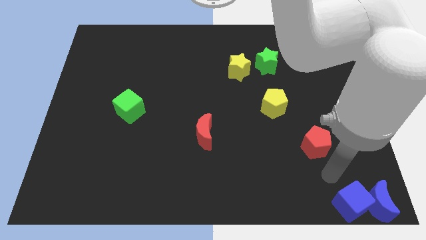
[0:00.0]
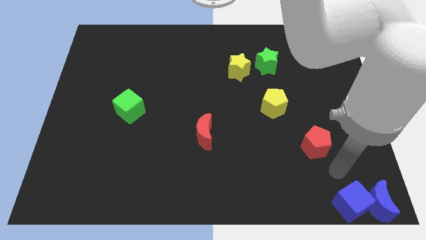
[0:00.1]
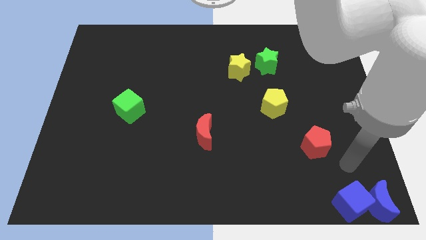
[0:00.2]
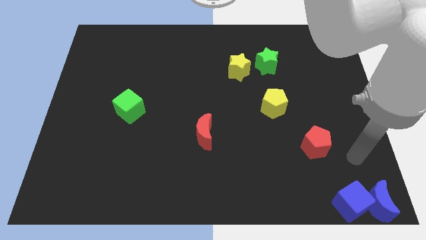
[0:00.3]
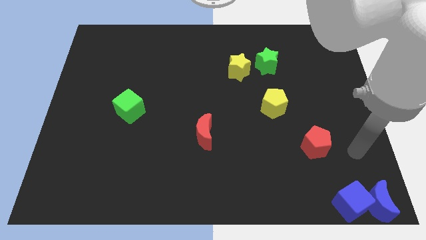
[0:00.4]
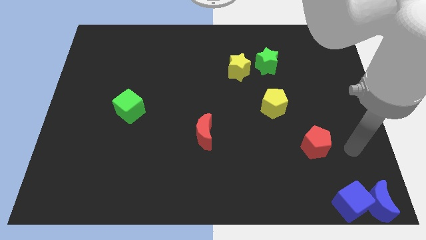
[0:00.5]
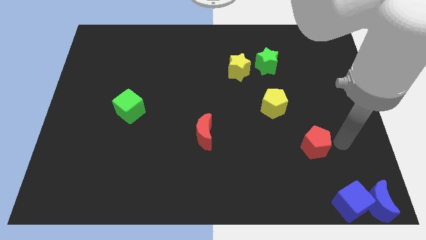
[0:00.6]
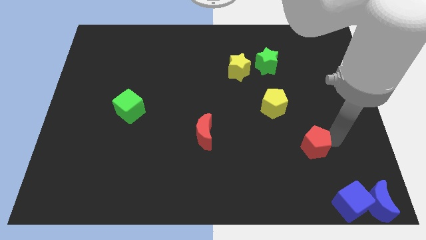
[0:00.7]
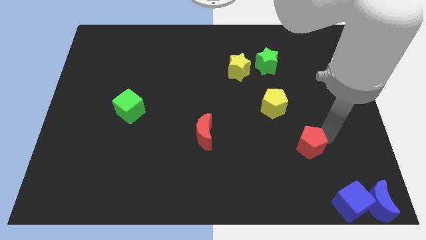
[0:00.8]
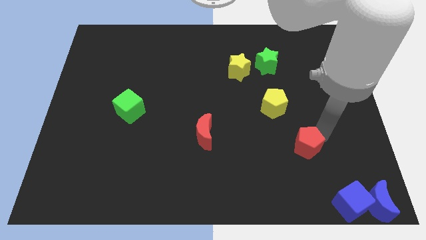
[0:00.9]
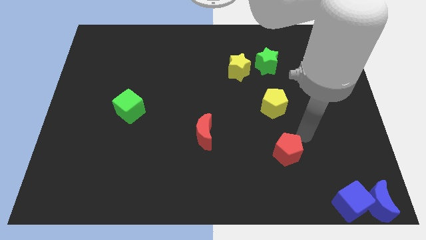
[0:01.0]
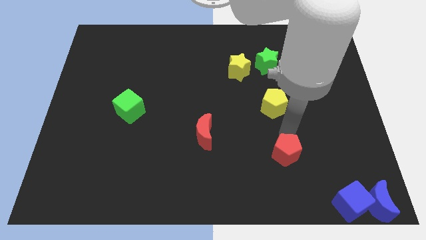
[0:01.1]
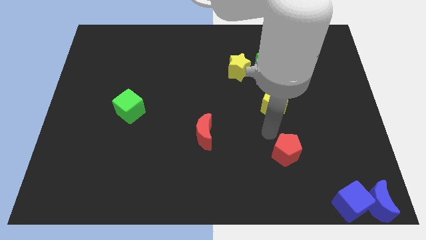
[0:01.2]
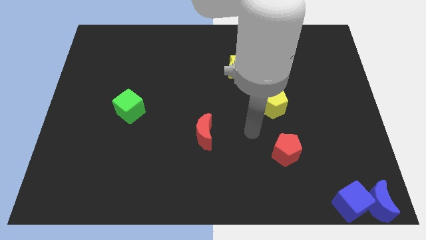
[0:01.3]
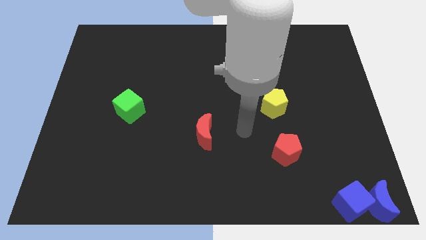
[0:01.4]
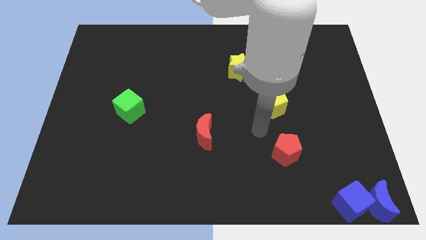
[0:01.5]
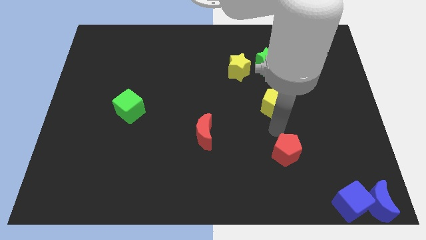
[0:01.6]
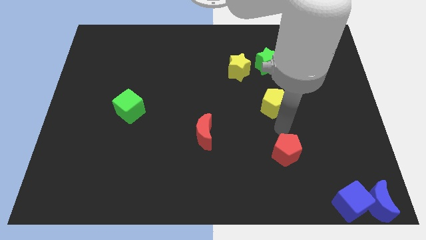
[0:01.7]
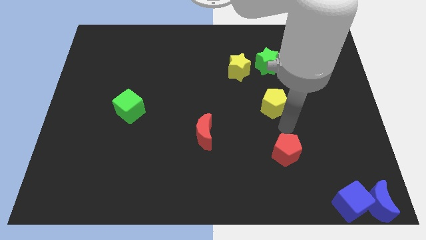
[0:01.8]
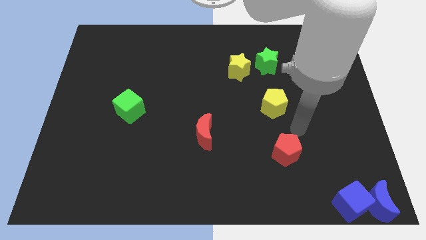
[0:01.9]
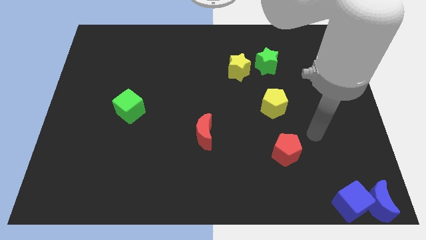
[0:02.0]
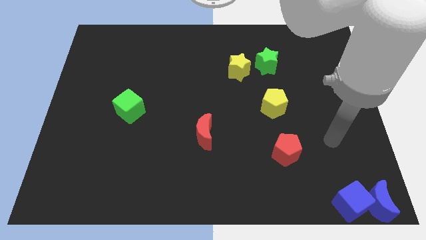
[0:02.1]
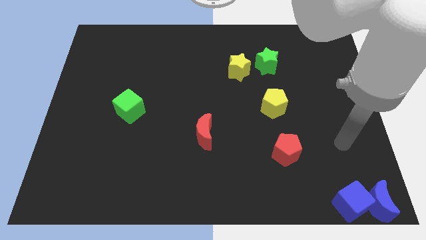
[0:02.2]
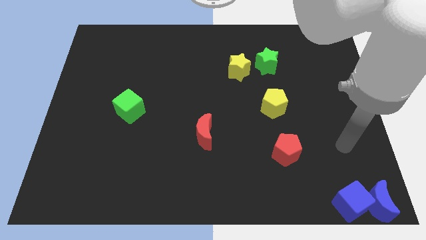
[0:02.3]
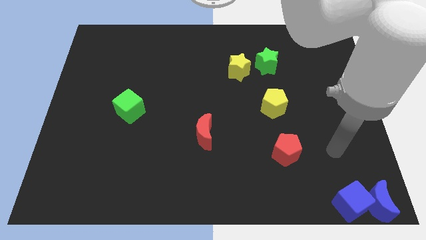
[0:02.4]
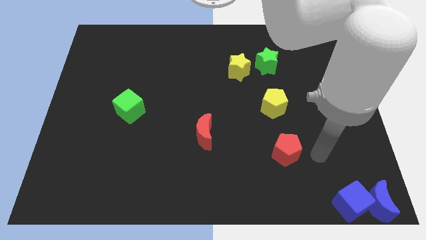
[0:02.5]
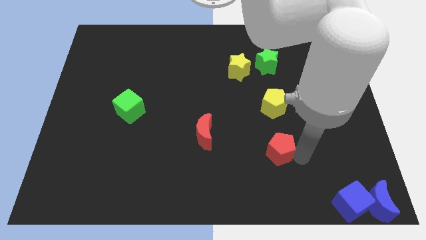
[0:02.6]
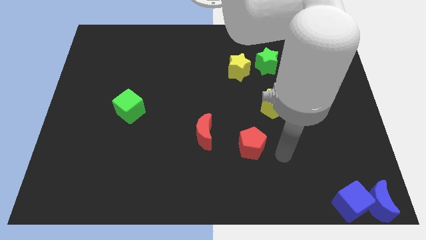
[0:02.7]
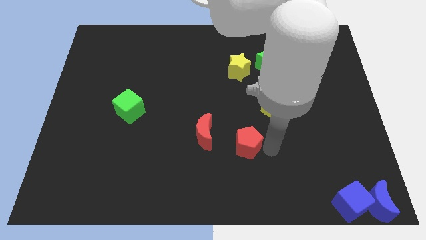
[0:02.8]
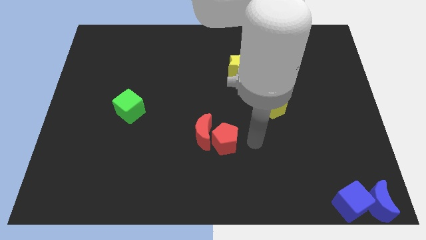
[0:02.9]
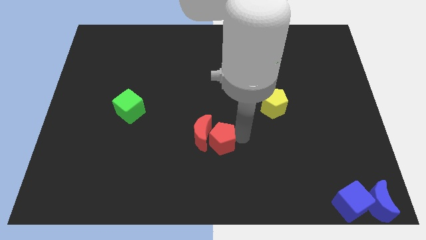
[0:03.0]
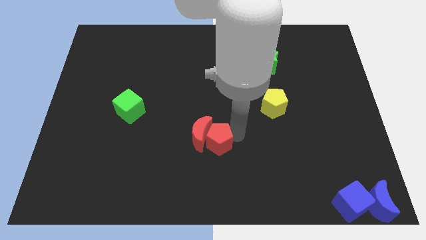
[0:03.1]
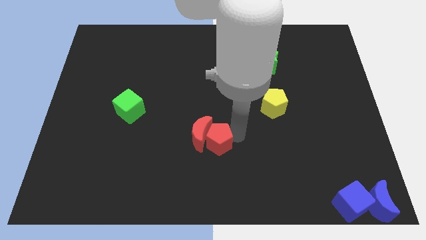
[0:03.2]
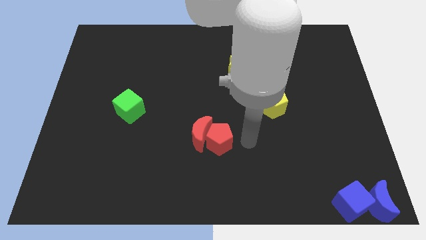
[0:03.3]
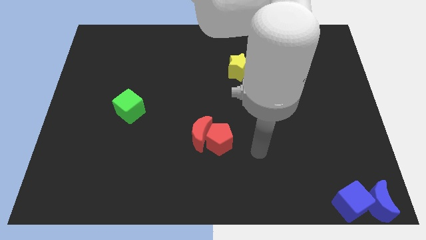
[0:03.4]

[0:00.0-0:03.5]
push red pentagon beside red crescent

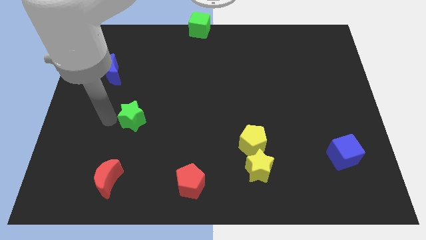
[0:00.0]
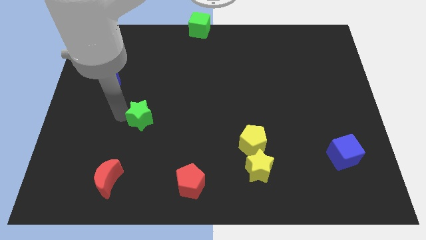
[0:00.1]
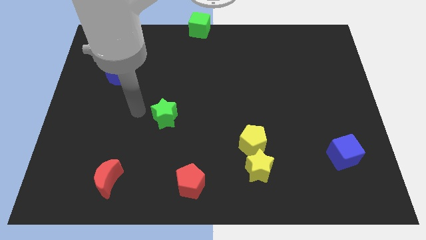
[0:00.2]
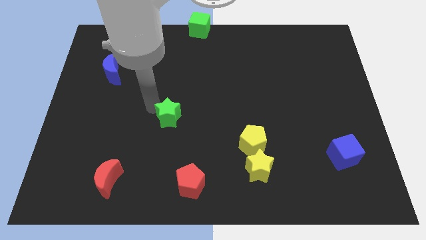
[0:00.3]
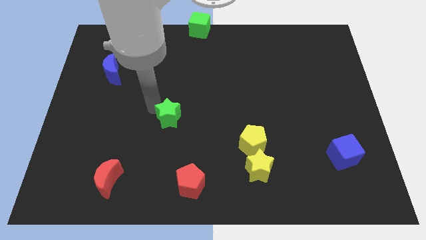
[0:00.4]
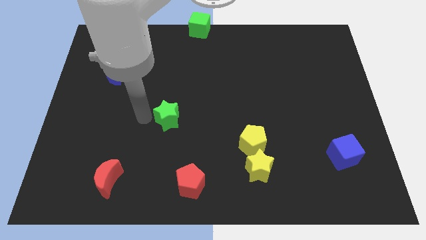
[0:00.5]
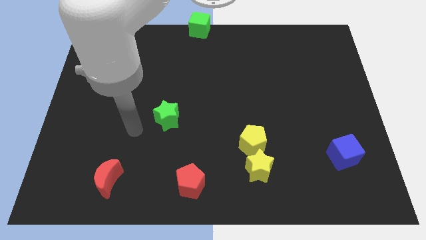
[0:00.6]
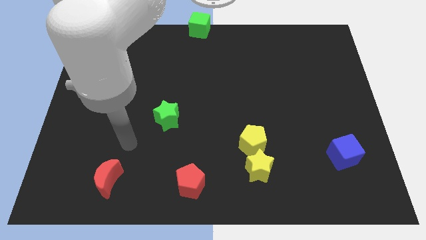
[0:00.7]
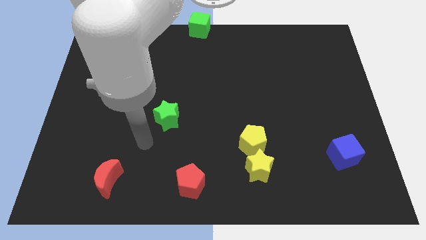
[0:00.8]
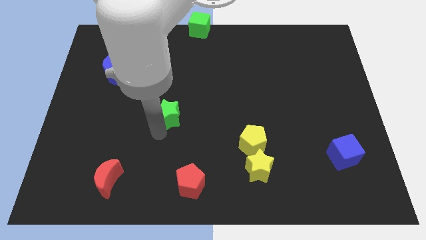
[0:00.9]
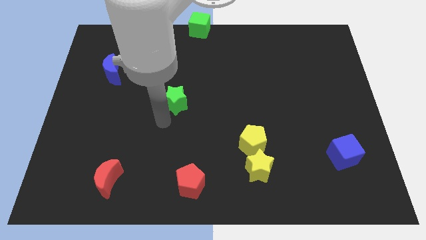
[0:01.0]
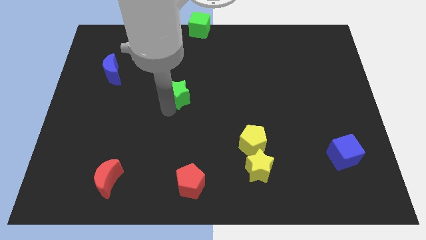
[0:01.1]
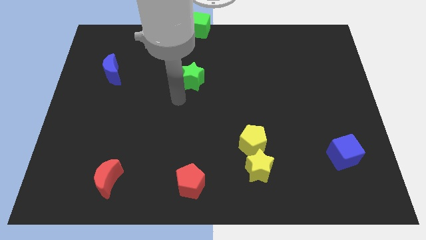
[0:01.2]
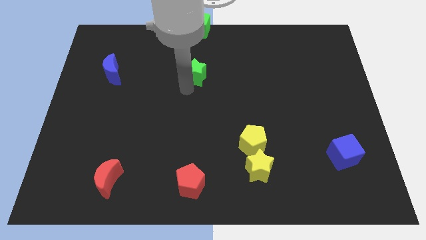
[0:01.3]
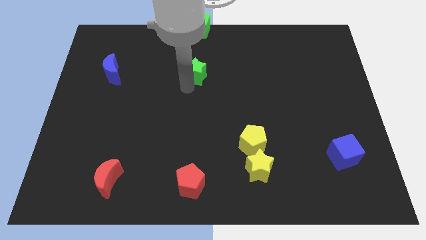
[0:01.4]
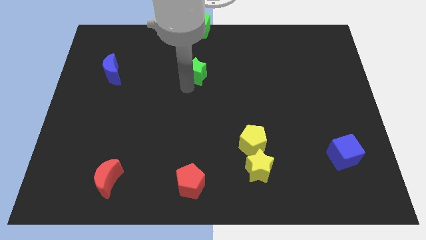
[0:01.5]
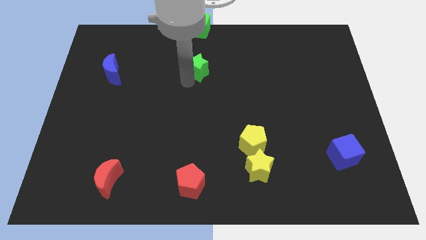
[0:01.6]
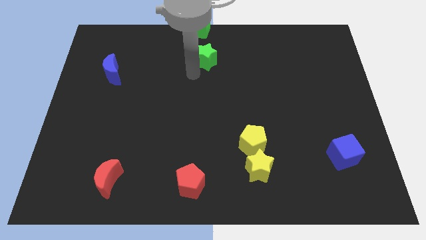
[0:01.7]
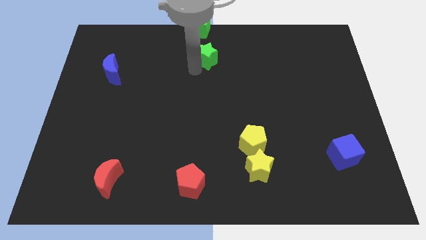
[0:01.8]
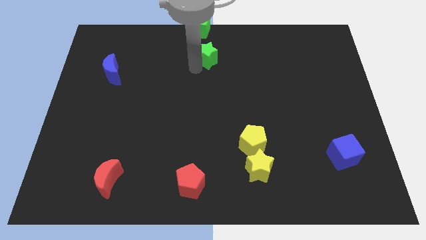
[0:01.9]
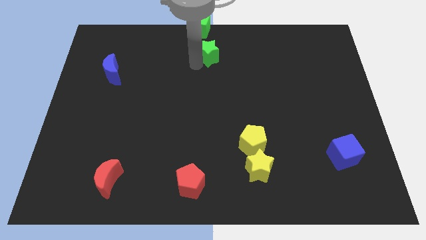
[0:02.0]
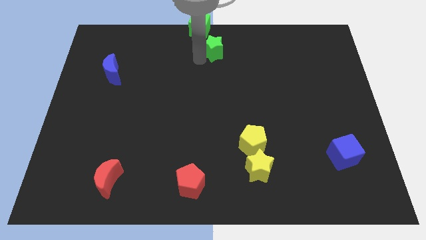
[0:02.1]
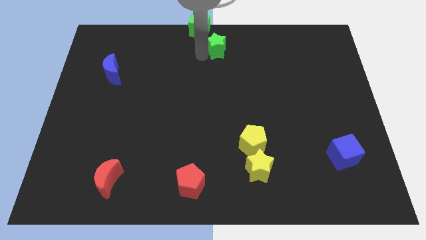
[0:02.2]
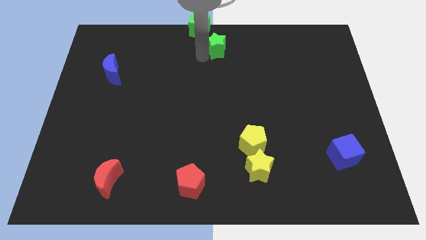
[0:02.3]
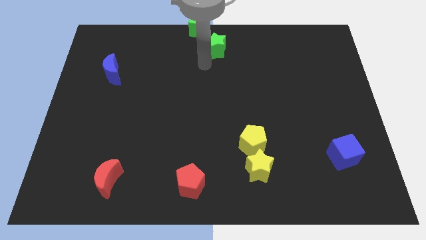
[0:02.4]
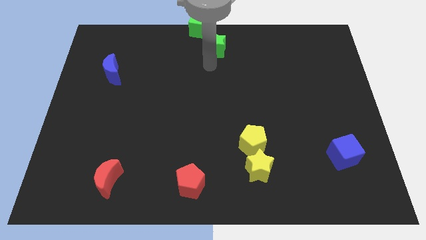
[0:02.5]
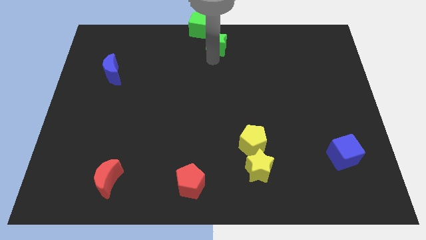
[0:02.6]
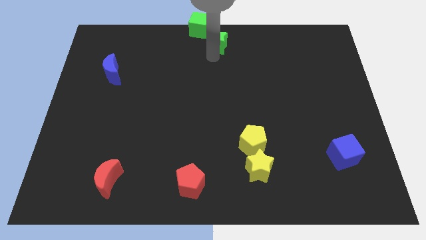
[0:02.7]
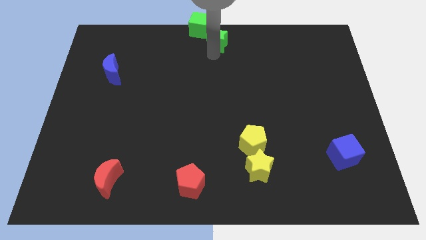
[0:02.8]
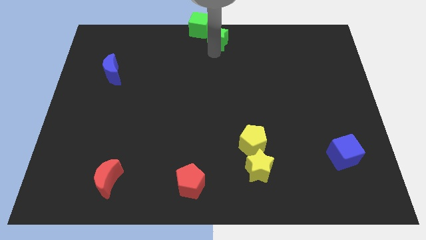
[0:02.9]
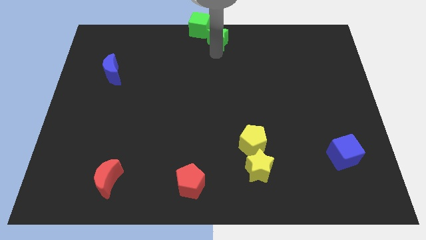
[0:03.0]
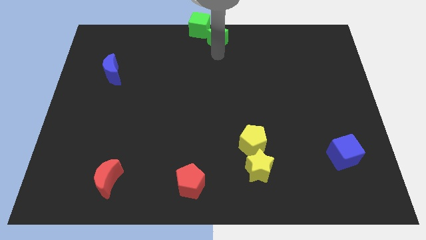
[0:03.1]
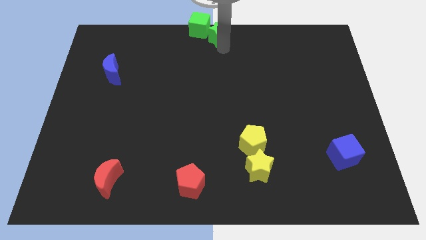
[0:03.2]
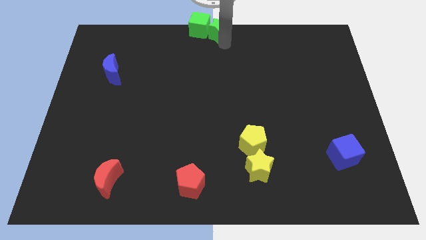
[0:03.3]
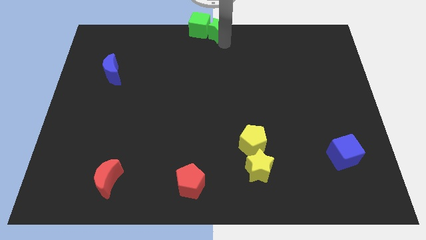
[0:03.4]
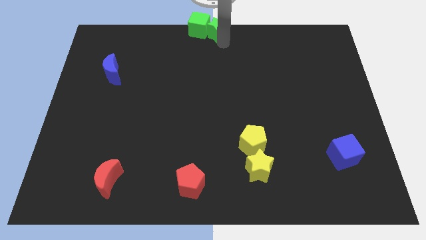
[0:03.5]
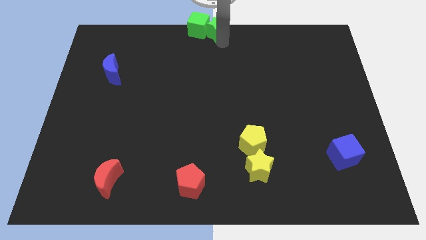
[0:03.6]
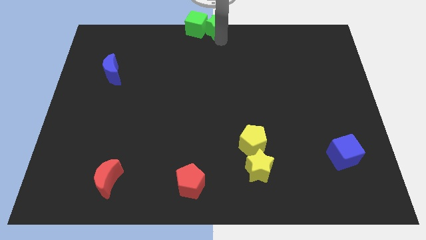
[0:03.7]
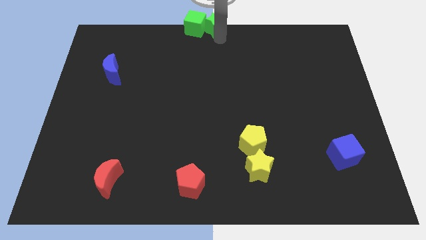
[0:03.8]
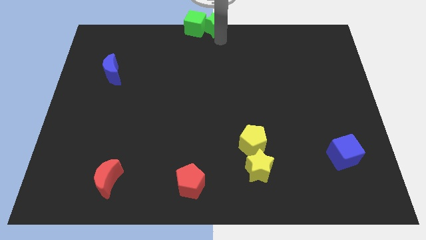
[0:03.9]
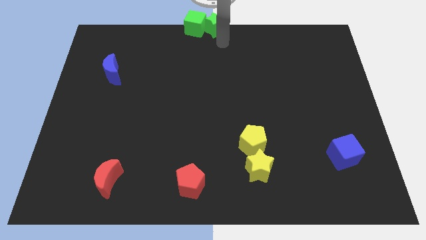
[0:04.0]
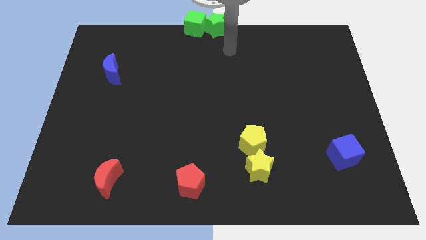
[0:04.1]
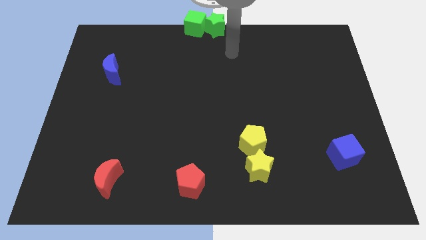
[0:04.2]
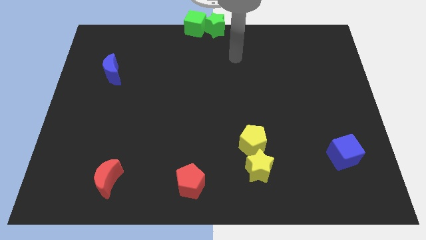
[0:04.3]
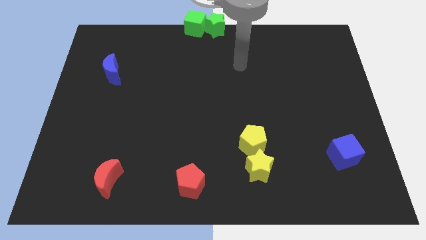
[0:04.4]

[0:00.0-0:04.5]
move the green star to the right side of the green cube

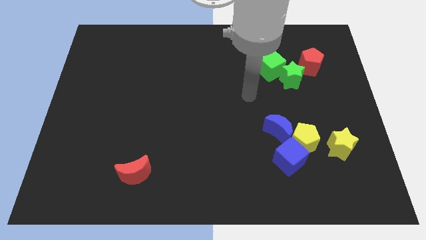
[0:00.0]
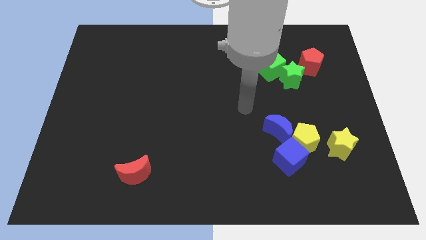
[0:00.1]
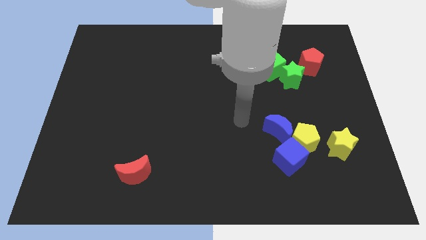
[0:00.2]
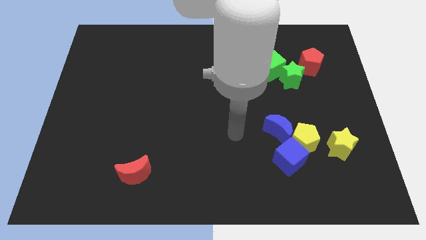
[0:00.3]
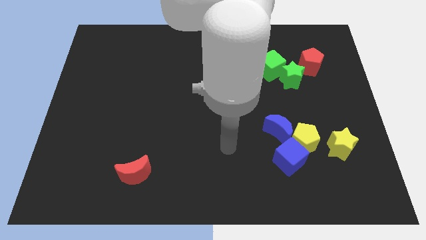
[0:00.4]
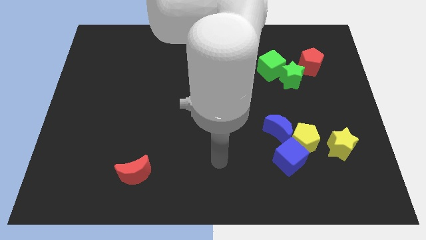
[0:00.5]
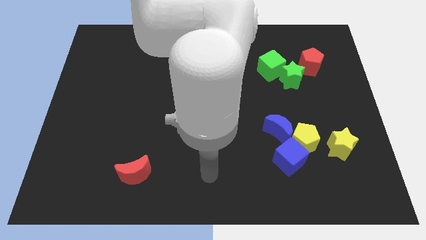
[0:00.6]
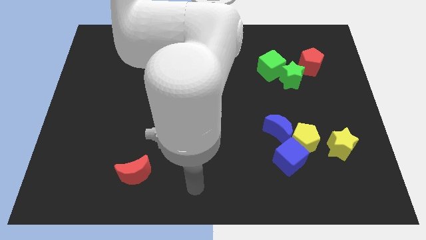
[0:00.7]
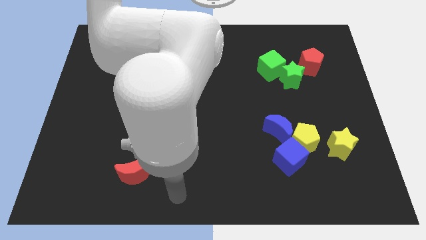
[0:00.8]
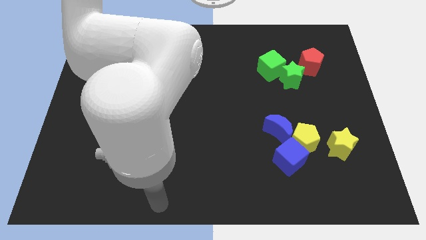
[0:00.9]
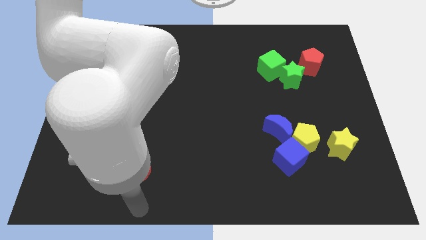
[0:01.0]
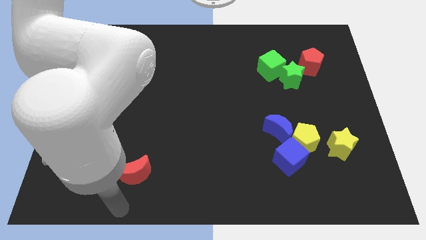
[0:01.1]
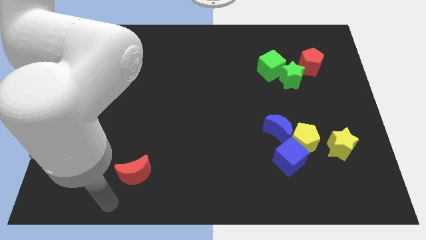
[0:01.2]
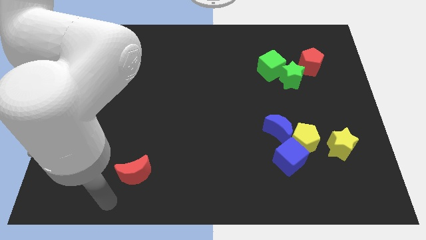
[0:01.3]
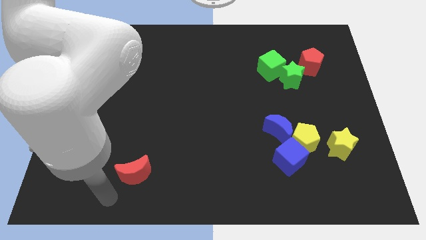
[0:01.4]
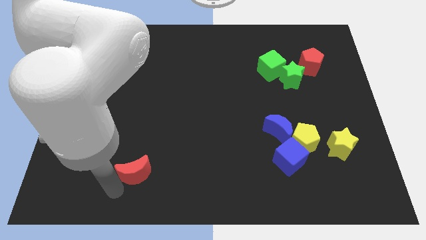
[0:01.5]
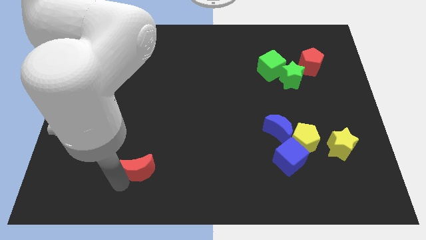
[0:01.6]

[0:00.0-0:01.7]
place your arm at the bottom of the red crescent
